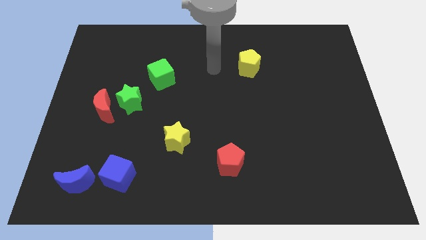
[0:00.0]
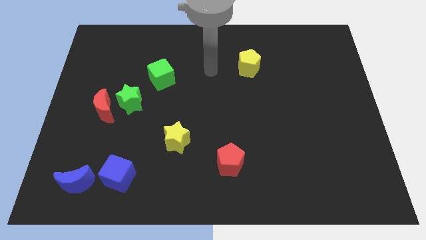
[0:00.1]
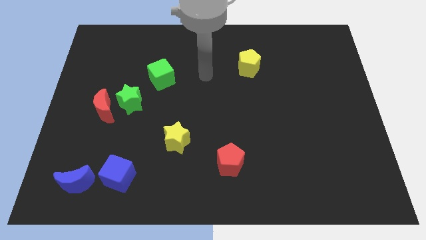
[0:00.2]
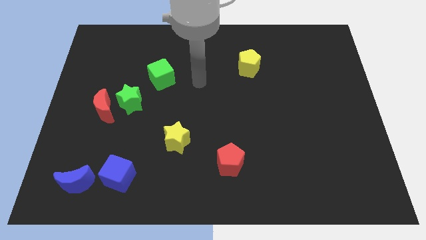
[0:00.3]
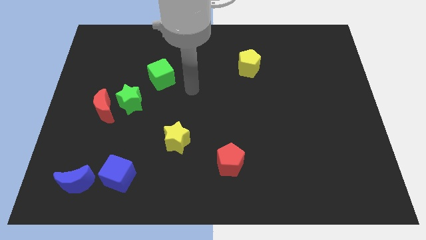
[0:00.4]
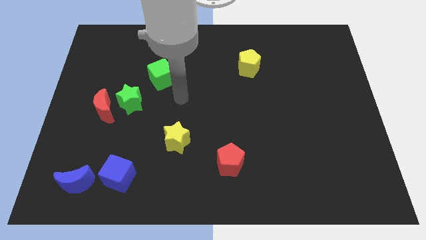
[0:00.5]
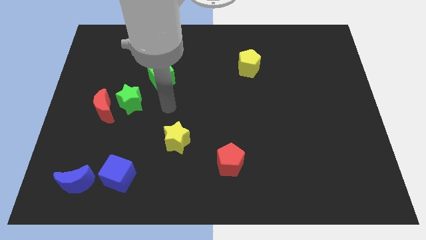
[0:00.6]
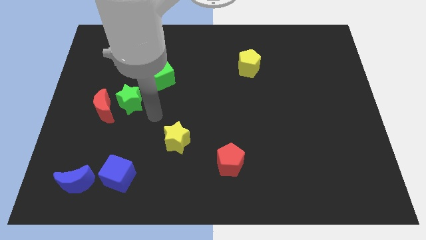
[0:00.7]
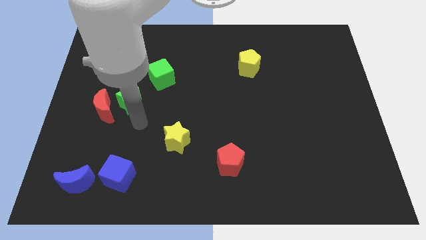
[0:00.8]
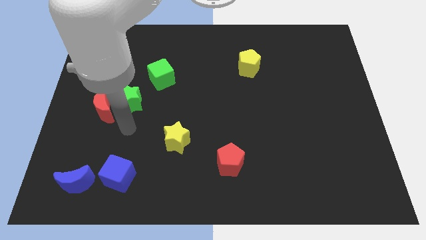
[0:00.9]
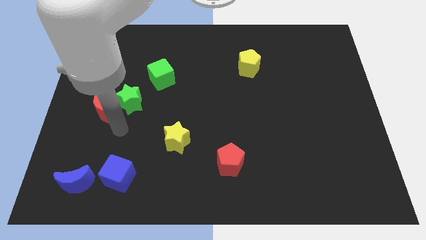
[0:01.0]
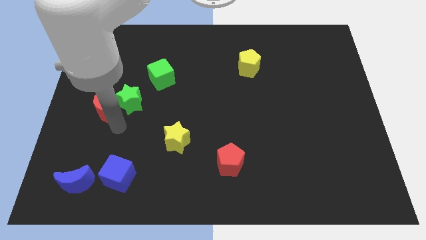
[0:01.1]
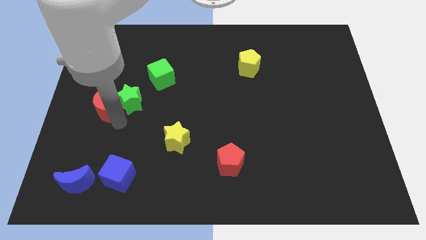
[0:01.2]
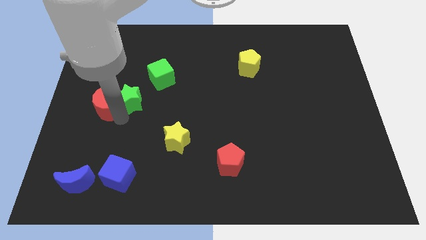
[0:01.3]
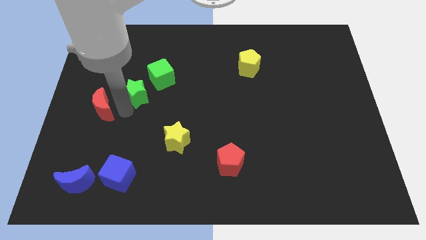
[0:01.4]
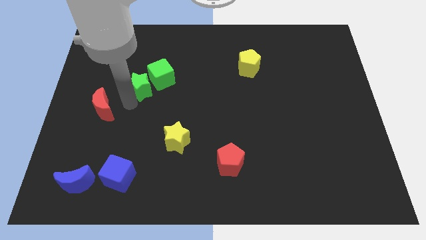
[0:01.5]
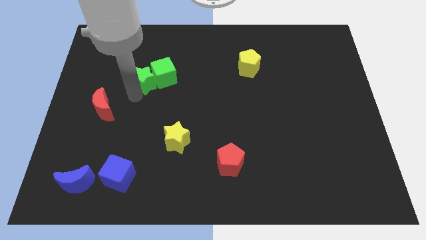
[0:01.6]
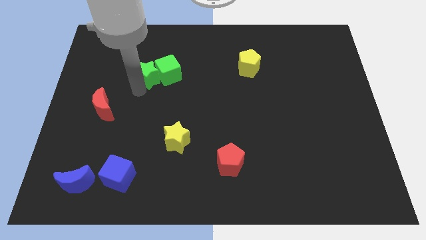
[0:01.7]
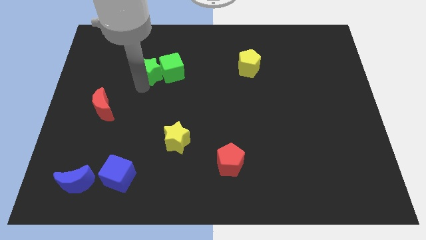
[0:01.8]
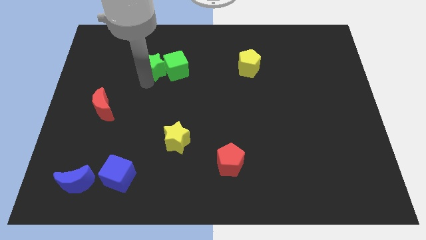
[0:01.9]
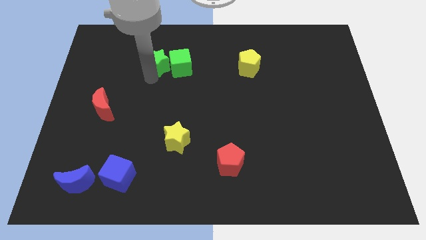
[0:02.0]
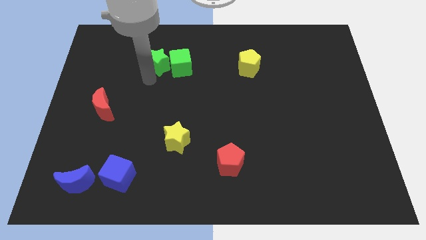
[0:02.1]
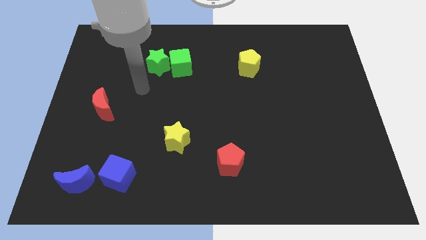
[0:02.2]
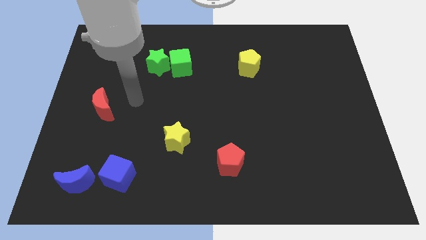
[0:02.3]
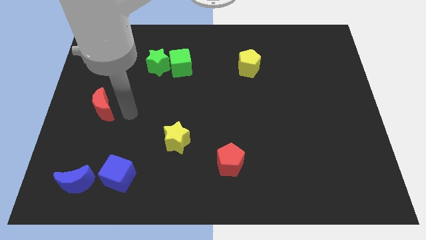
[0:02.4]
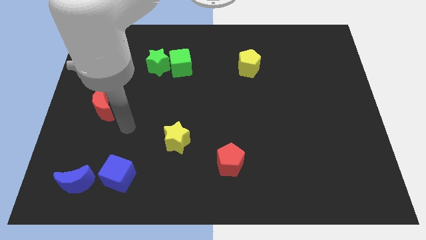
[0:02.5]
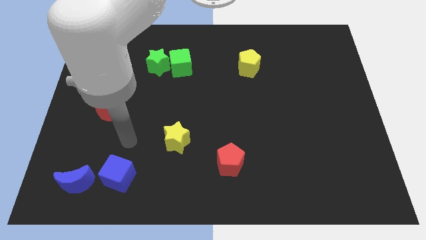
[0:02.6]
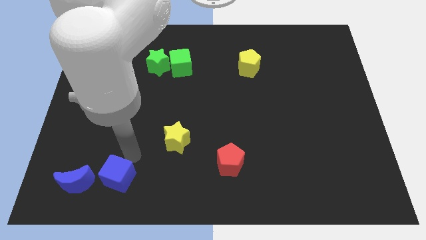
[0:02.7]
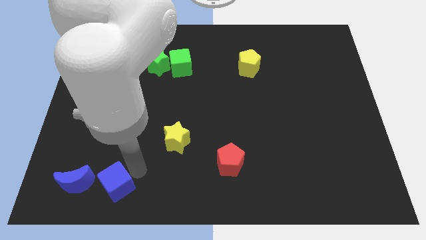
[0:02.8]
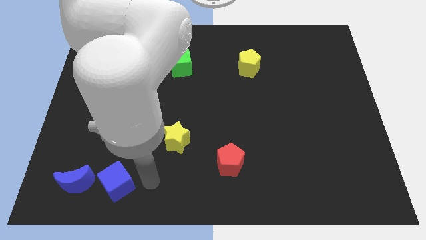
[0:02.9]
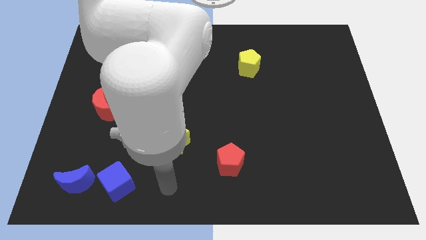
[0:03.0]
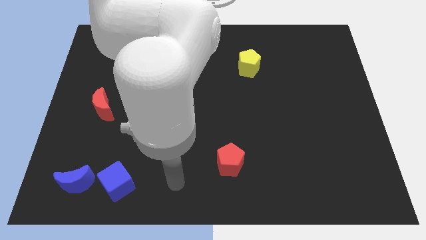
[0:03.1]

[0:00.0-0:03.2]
move green star into green cube

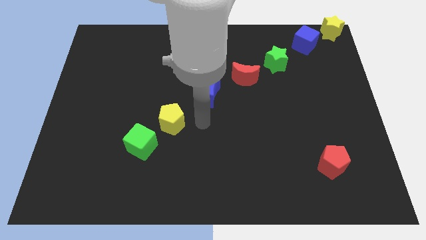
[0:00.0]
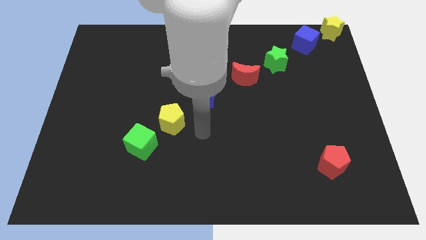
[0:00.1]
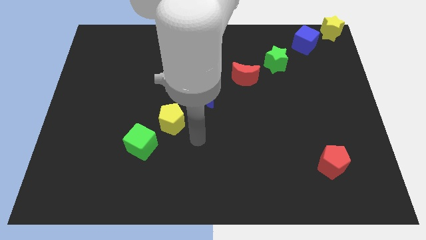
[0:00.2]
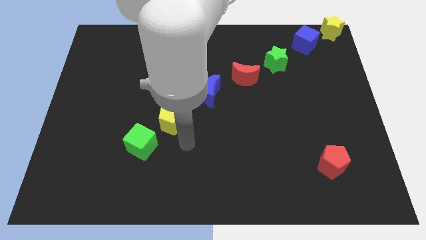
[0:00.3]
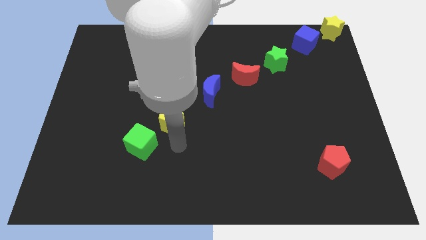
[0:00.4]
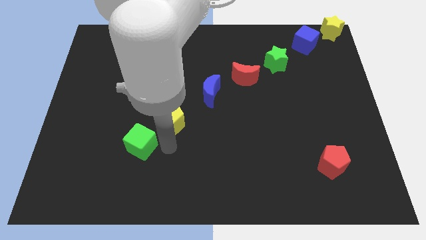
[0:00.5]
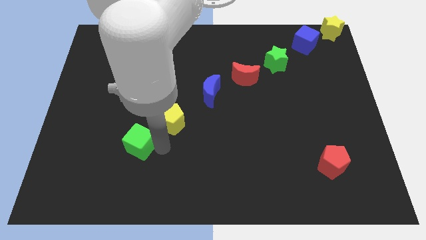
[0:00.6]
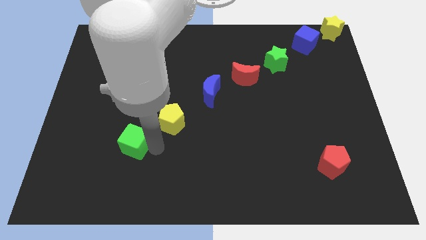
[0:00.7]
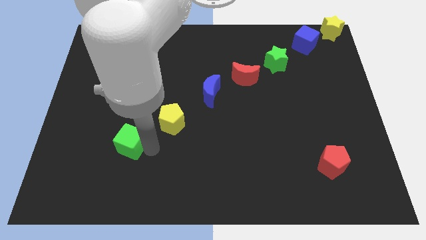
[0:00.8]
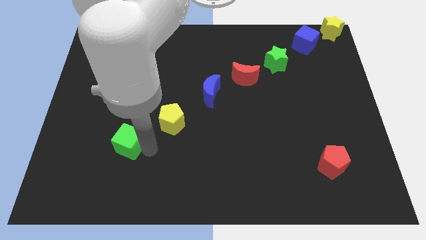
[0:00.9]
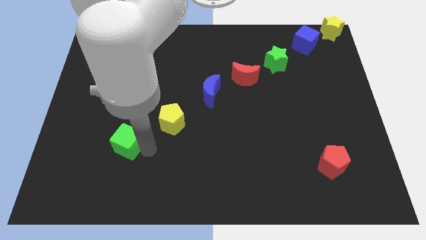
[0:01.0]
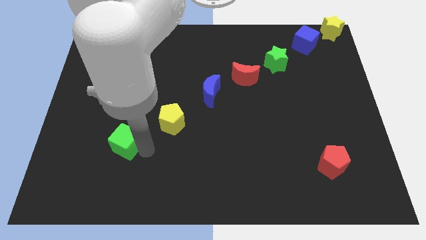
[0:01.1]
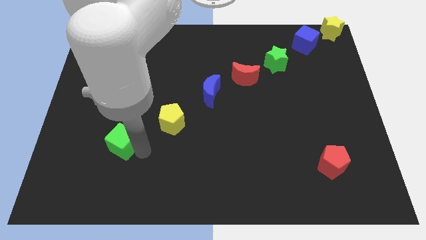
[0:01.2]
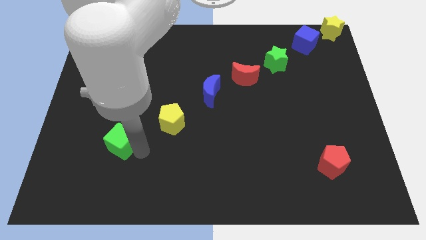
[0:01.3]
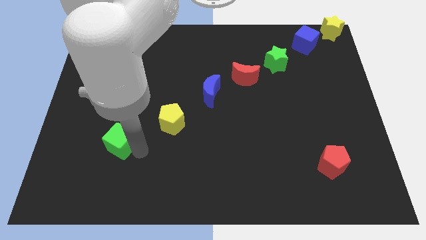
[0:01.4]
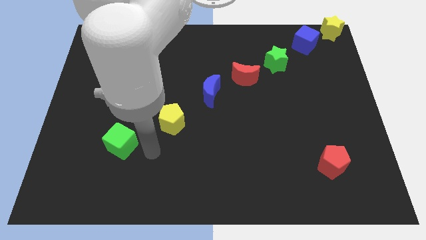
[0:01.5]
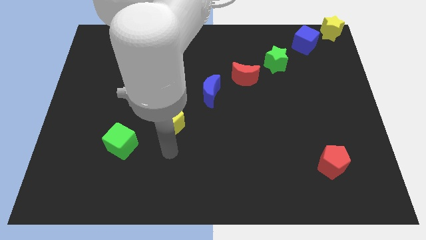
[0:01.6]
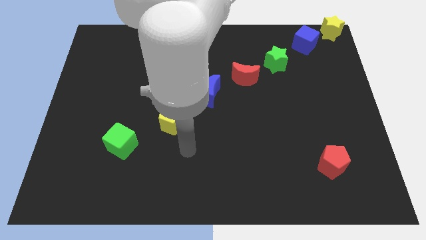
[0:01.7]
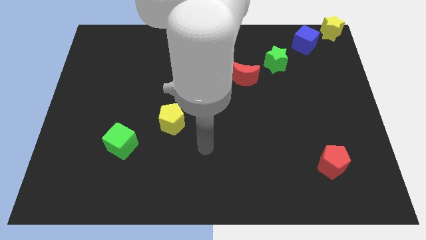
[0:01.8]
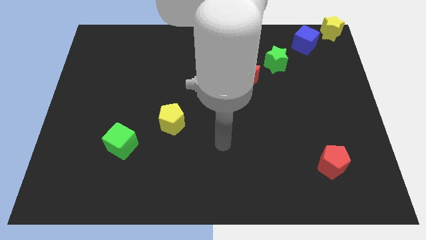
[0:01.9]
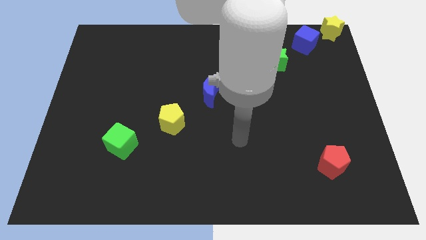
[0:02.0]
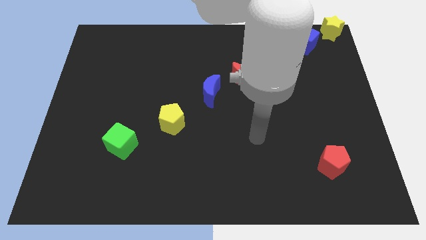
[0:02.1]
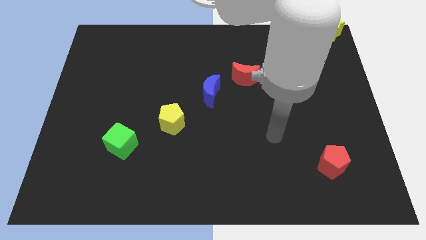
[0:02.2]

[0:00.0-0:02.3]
slightly push the green cube to the left

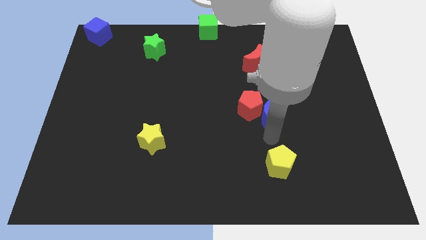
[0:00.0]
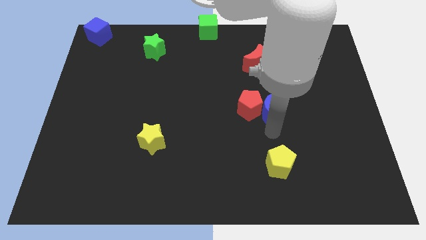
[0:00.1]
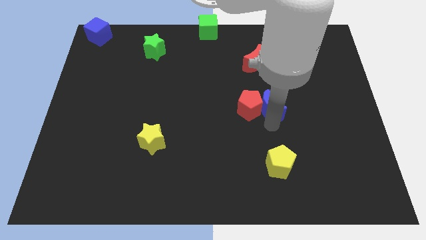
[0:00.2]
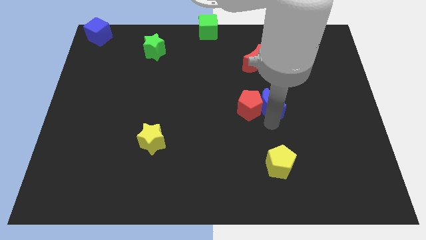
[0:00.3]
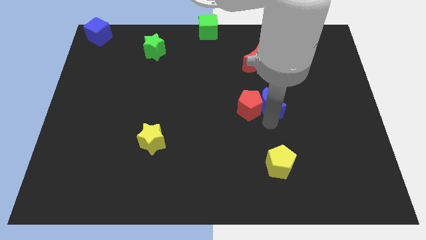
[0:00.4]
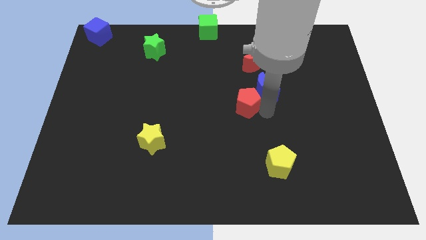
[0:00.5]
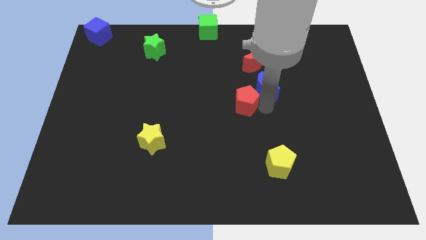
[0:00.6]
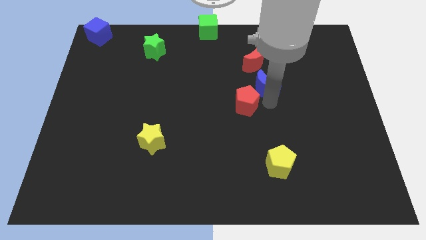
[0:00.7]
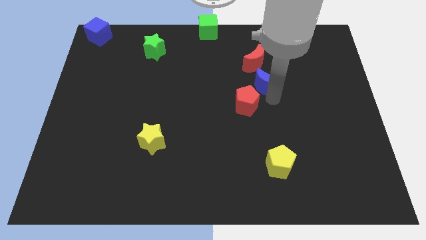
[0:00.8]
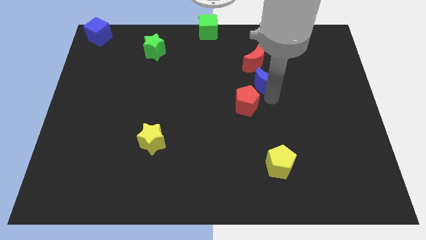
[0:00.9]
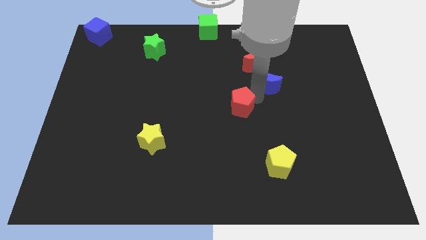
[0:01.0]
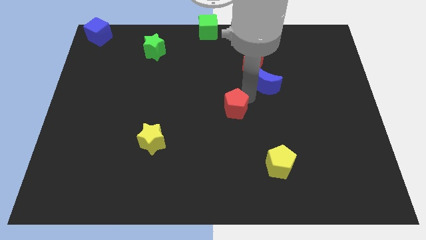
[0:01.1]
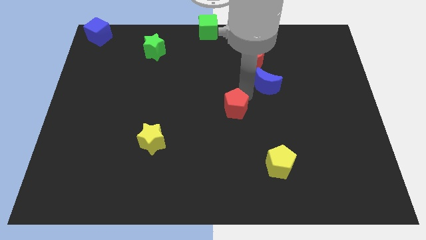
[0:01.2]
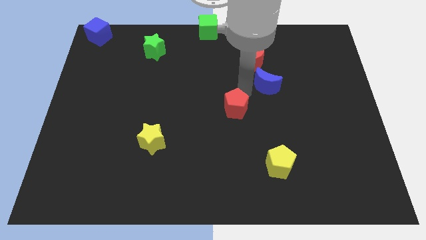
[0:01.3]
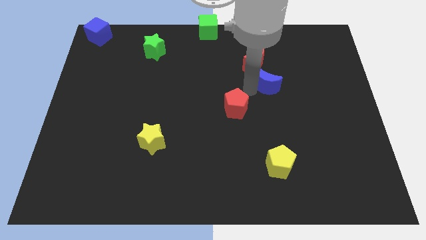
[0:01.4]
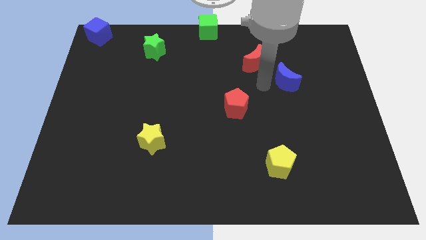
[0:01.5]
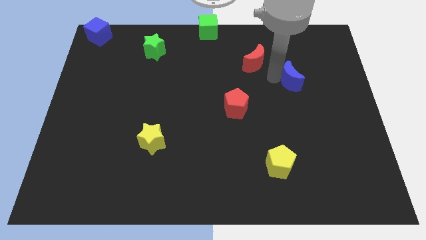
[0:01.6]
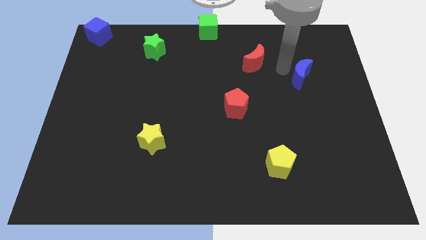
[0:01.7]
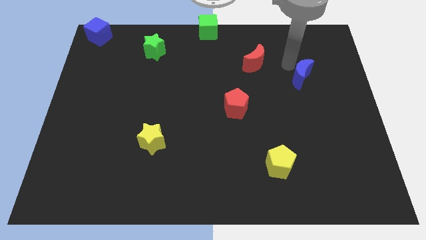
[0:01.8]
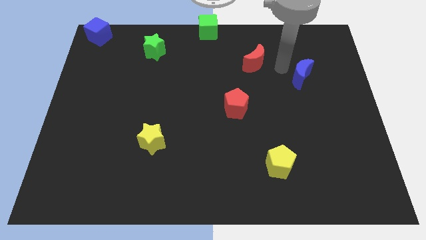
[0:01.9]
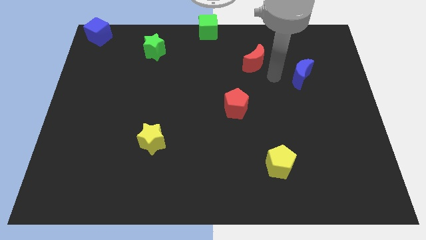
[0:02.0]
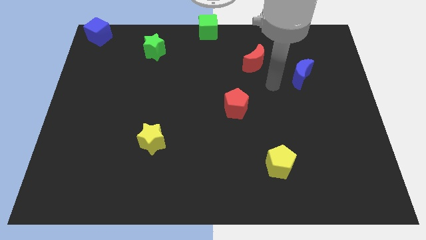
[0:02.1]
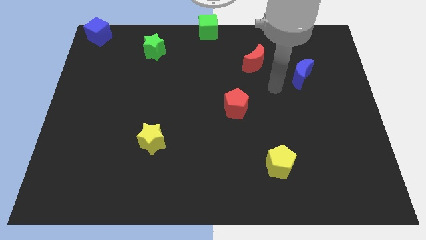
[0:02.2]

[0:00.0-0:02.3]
put the blue crescent diagonal to the red pentagon

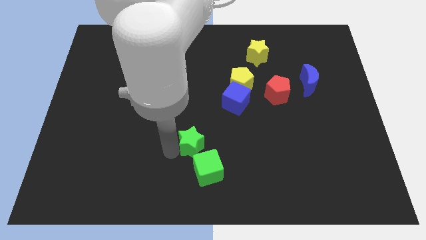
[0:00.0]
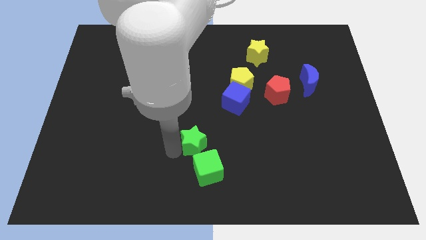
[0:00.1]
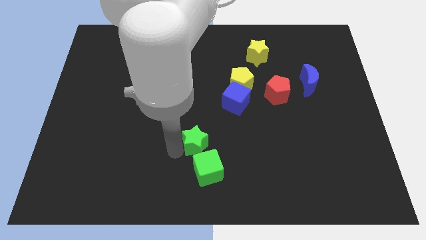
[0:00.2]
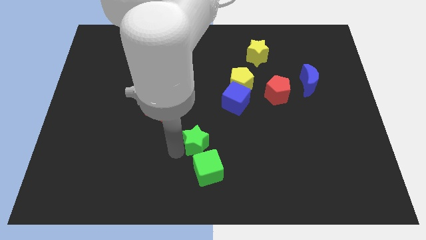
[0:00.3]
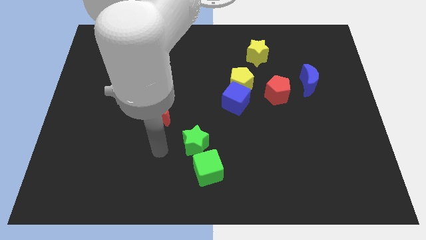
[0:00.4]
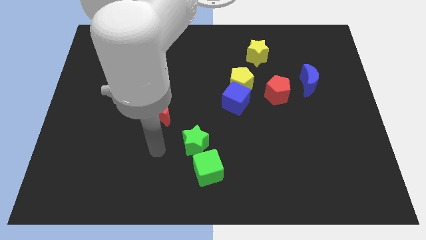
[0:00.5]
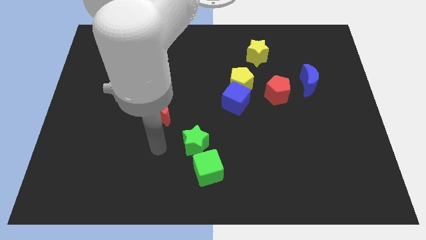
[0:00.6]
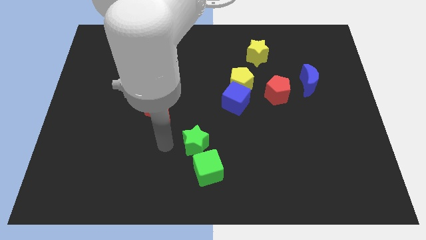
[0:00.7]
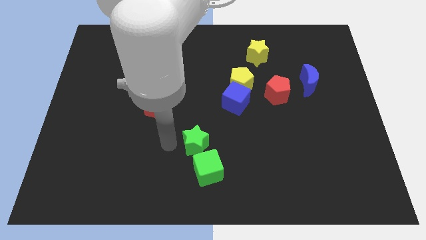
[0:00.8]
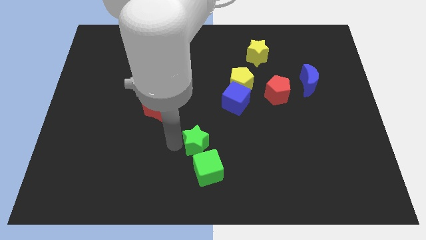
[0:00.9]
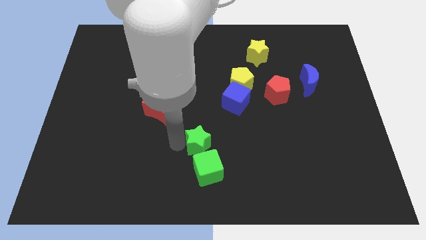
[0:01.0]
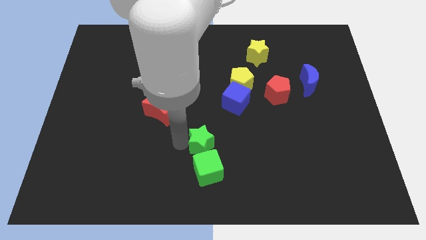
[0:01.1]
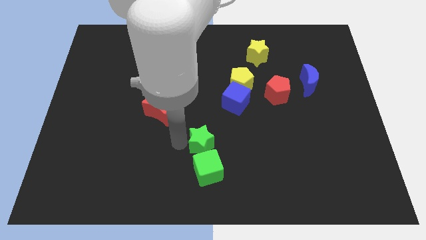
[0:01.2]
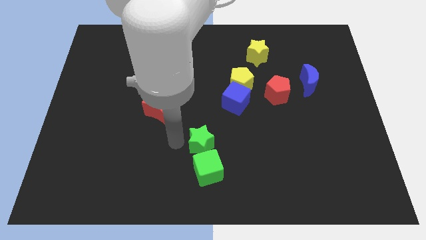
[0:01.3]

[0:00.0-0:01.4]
push the green star at the top of the green cube
